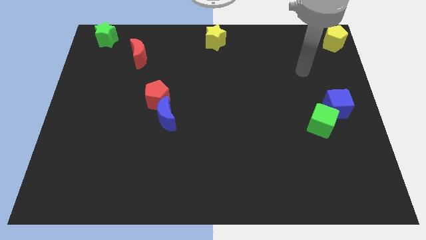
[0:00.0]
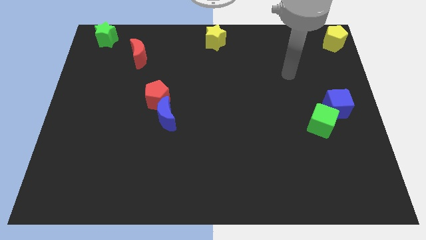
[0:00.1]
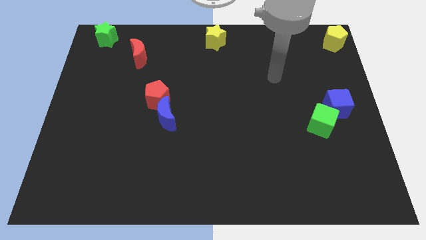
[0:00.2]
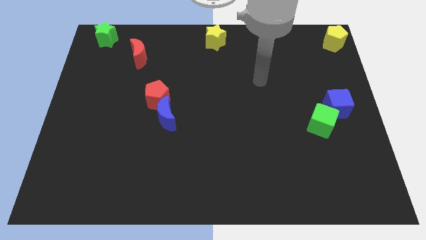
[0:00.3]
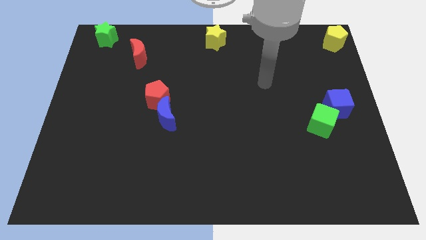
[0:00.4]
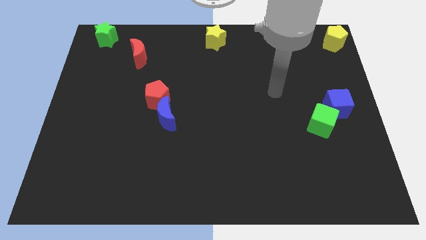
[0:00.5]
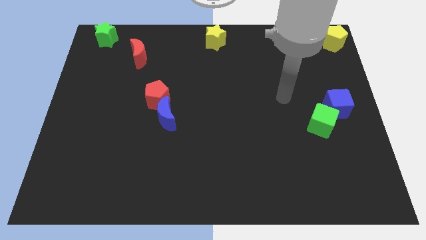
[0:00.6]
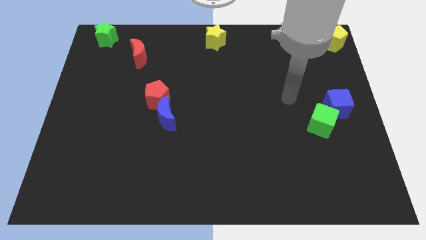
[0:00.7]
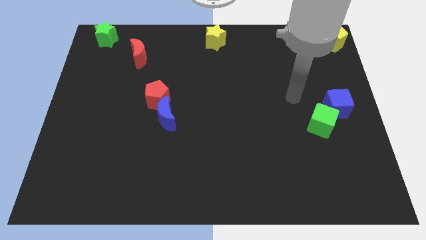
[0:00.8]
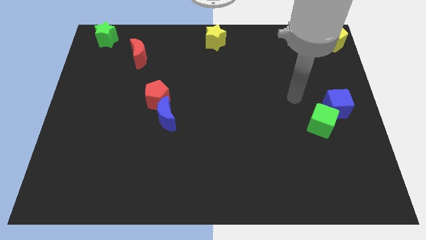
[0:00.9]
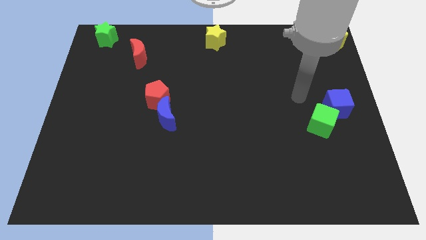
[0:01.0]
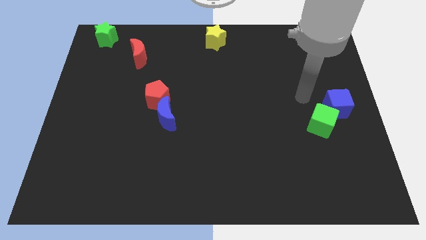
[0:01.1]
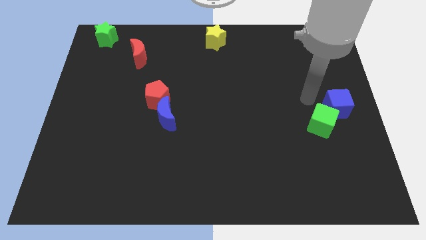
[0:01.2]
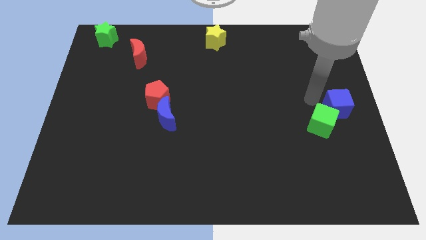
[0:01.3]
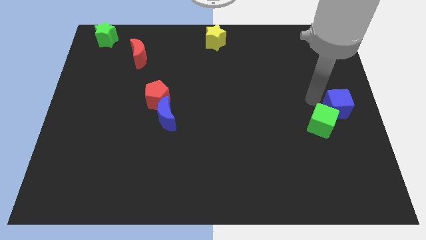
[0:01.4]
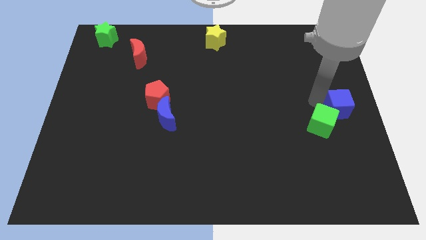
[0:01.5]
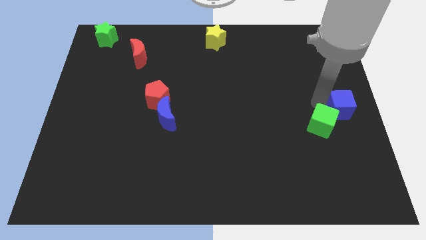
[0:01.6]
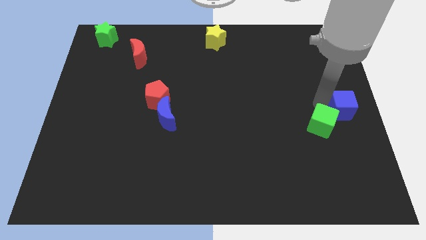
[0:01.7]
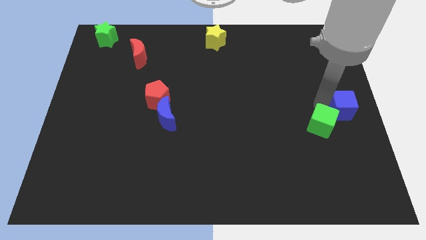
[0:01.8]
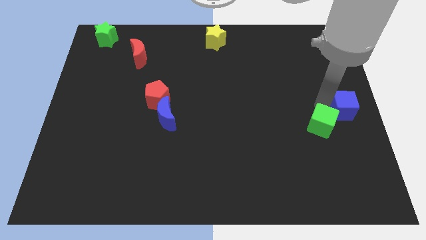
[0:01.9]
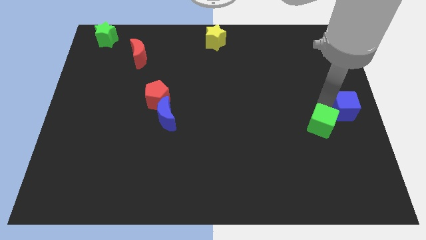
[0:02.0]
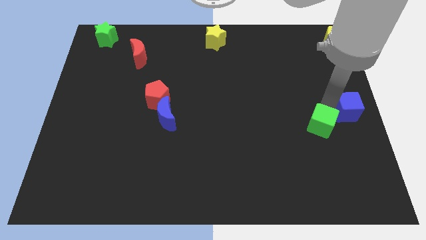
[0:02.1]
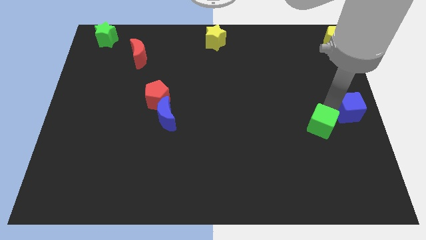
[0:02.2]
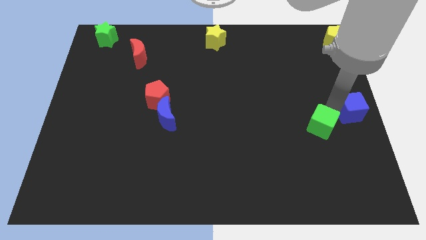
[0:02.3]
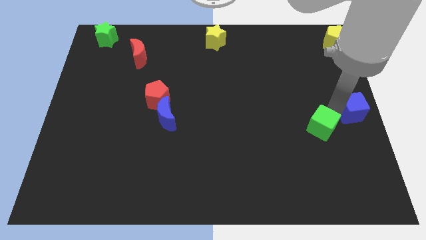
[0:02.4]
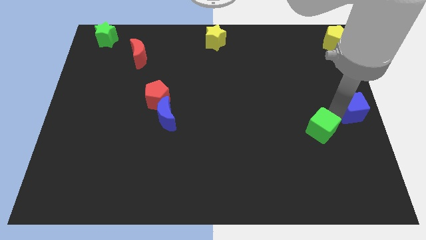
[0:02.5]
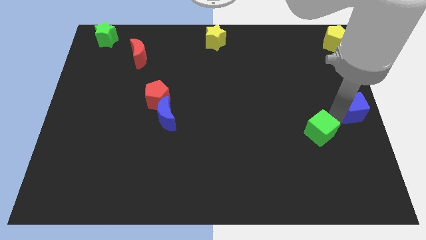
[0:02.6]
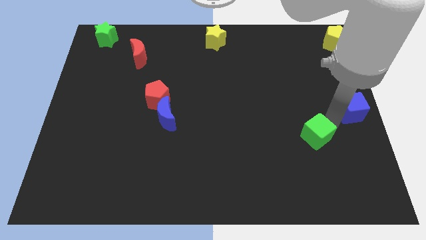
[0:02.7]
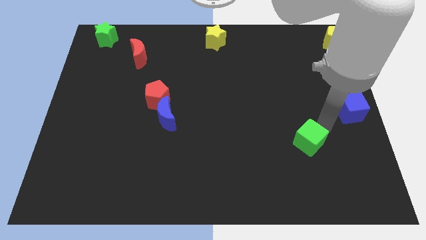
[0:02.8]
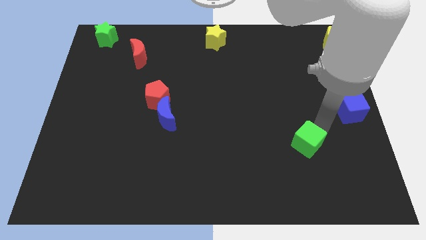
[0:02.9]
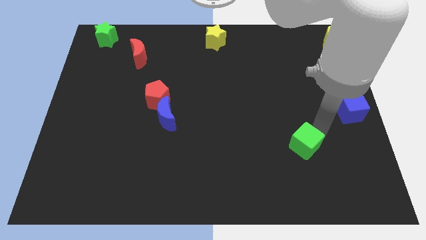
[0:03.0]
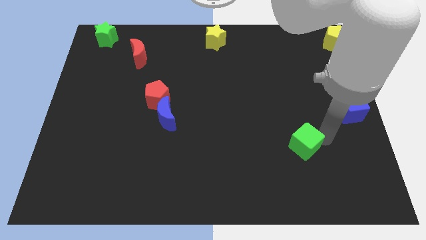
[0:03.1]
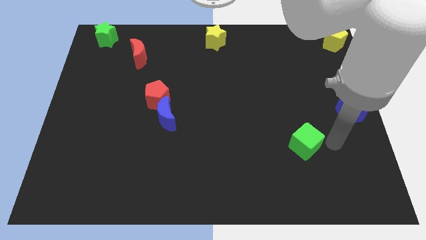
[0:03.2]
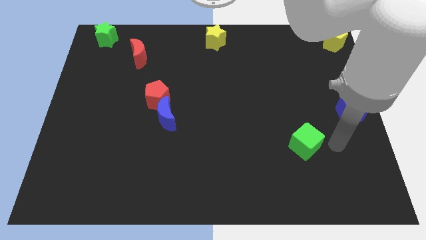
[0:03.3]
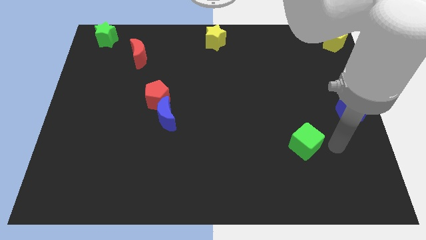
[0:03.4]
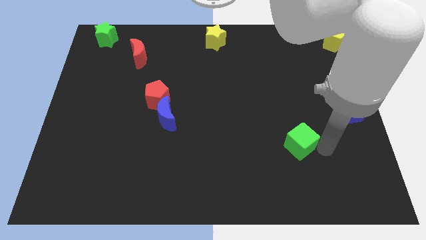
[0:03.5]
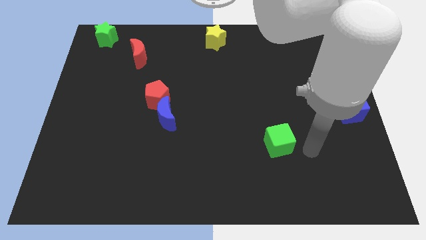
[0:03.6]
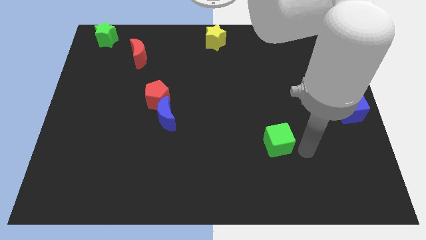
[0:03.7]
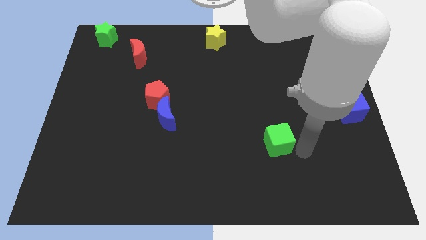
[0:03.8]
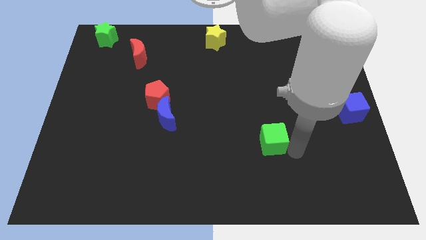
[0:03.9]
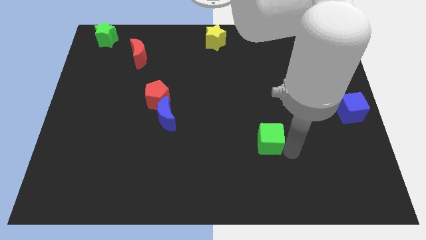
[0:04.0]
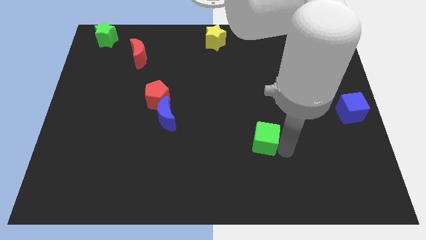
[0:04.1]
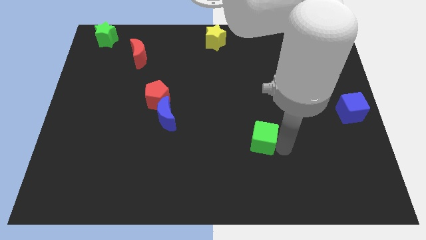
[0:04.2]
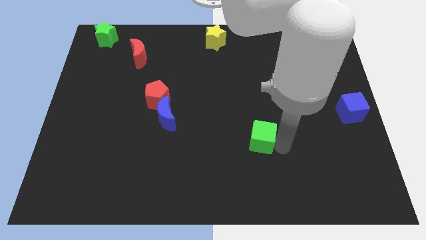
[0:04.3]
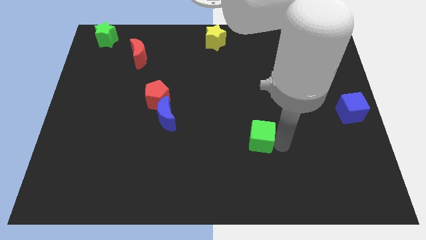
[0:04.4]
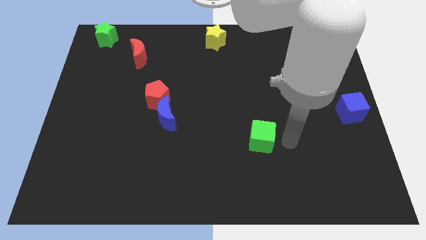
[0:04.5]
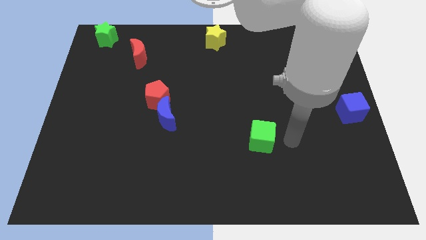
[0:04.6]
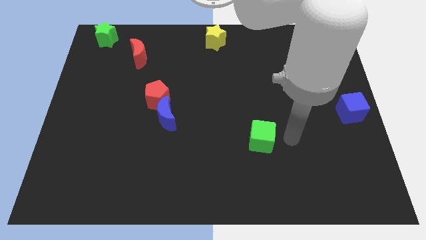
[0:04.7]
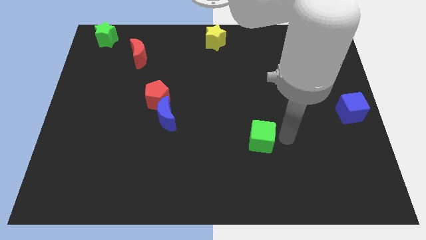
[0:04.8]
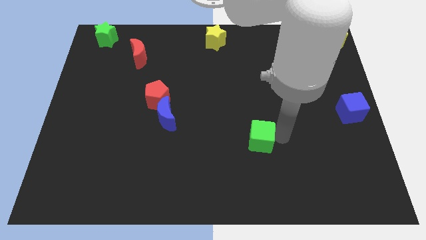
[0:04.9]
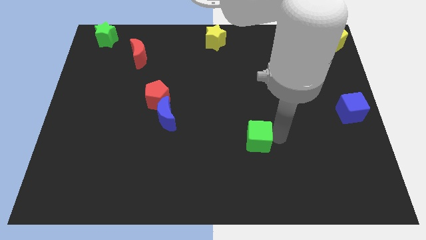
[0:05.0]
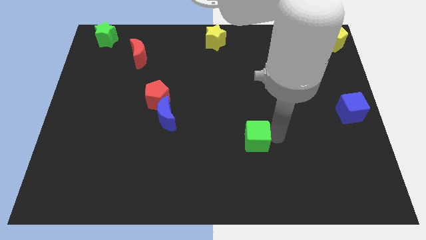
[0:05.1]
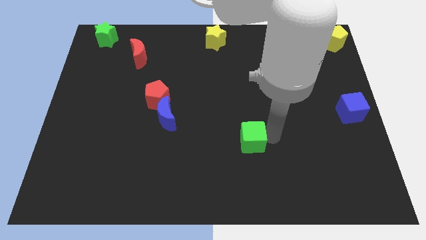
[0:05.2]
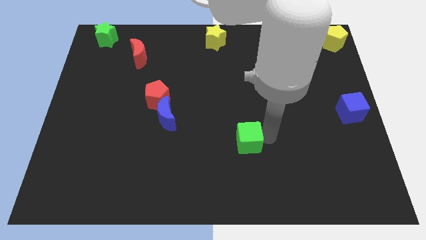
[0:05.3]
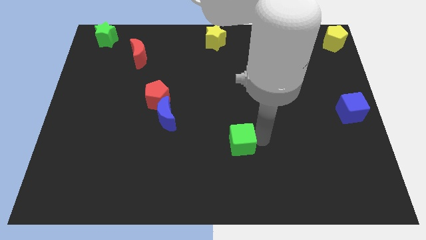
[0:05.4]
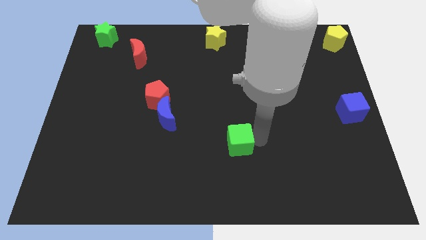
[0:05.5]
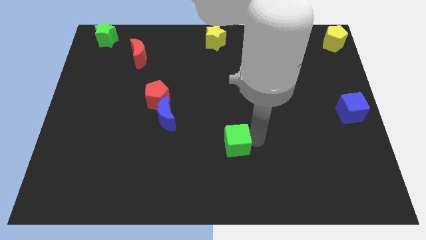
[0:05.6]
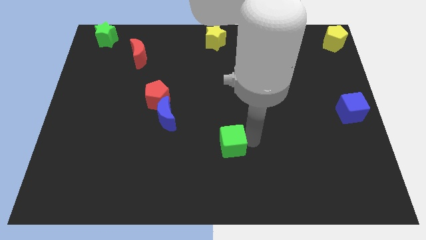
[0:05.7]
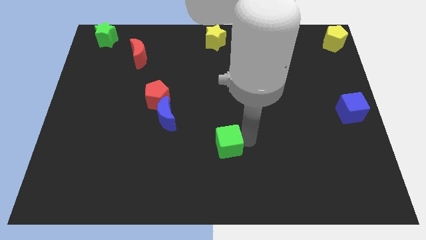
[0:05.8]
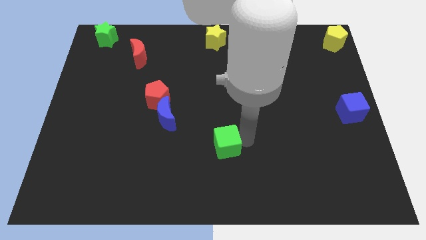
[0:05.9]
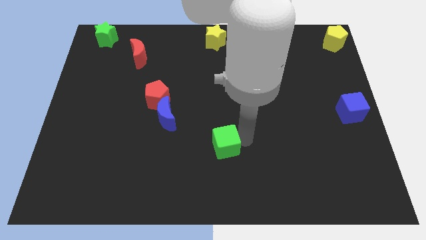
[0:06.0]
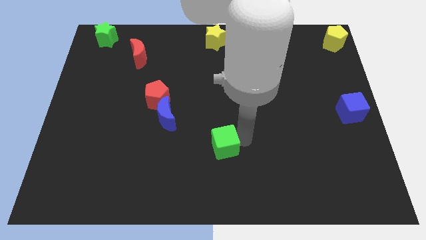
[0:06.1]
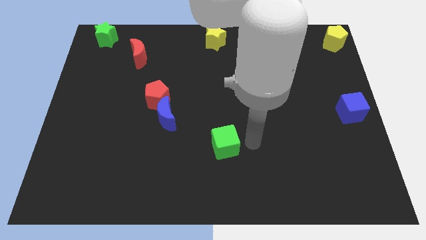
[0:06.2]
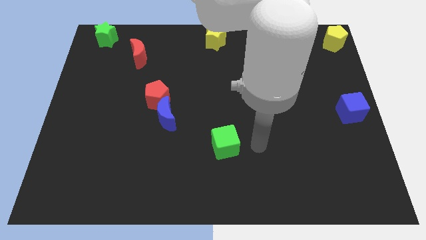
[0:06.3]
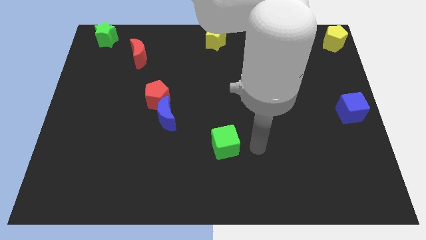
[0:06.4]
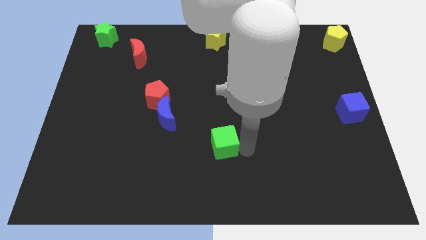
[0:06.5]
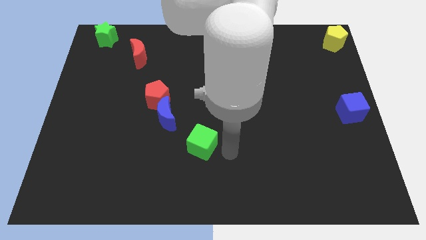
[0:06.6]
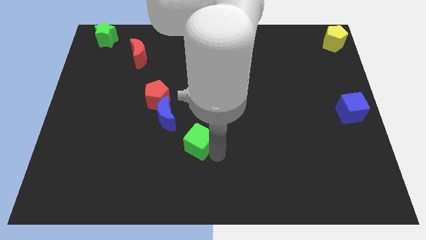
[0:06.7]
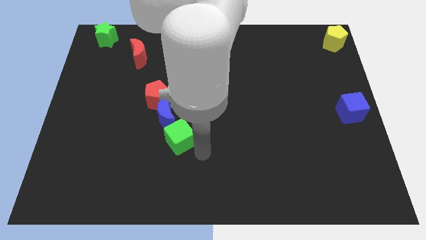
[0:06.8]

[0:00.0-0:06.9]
push the green cube to the left

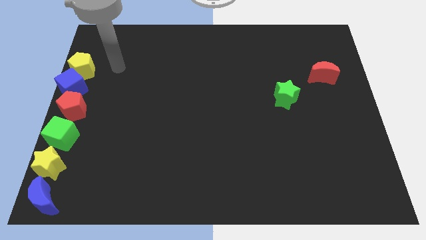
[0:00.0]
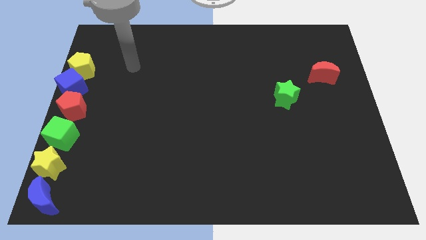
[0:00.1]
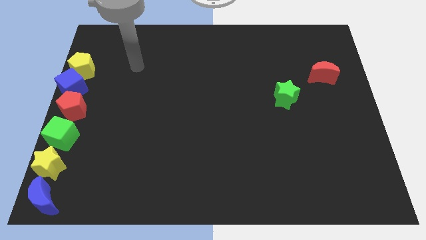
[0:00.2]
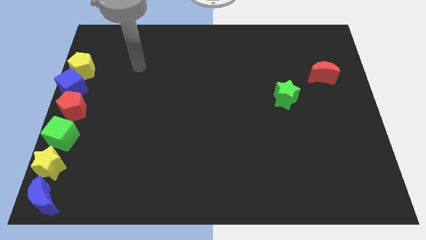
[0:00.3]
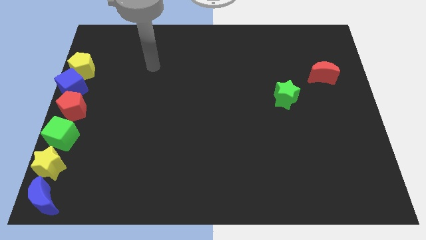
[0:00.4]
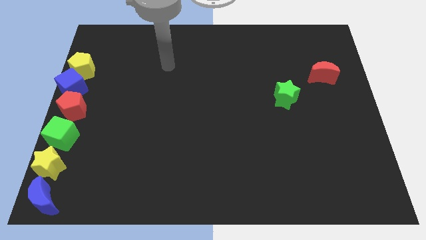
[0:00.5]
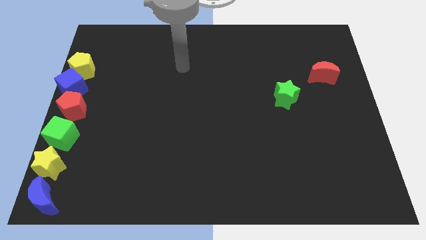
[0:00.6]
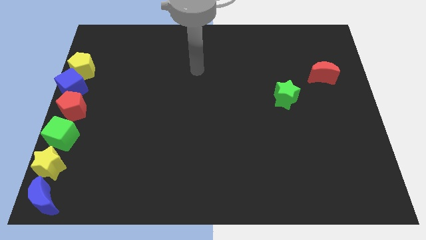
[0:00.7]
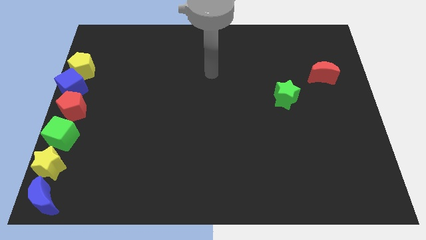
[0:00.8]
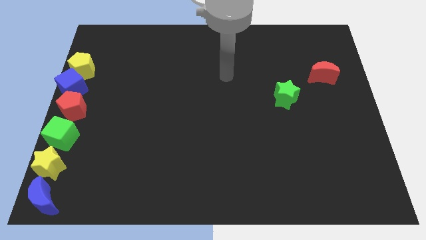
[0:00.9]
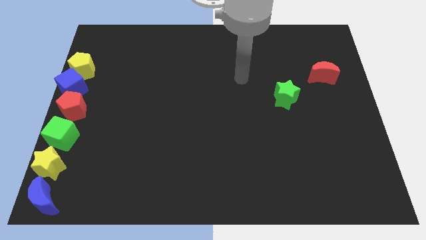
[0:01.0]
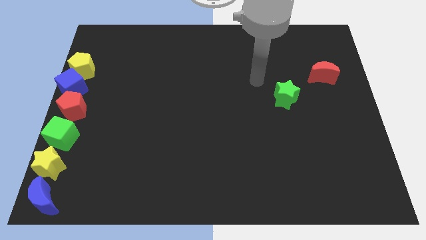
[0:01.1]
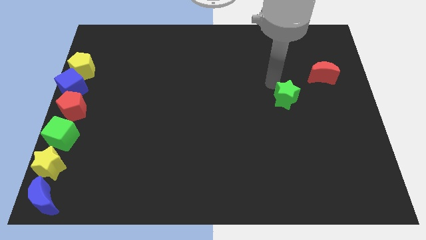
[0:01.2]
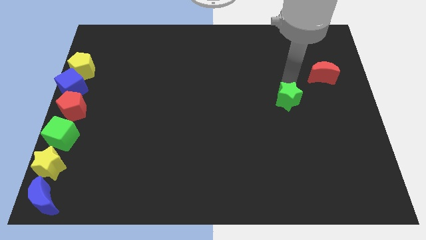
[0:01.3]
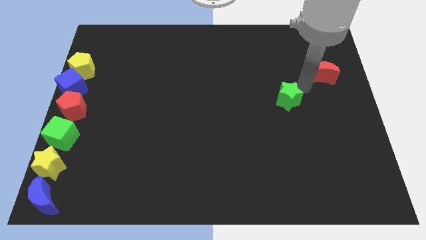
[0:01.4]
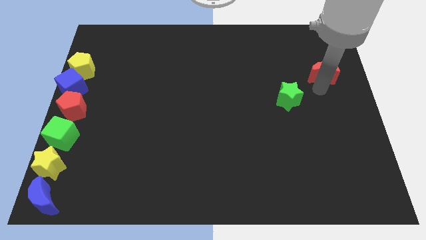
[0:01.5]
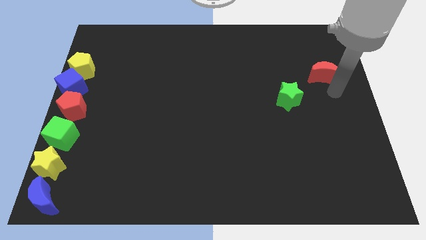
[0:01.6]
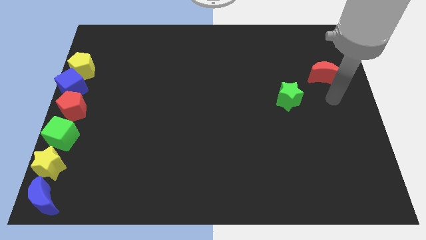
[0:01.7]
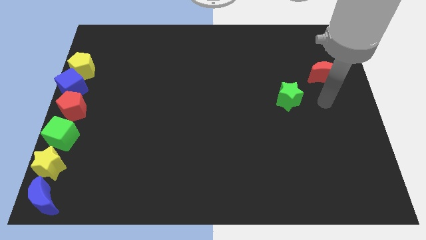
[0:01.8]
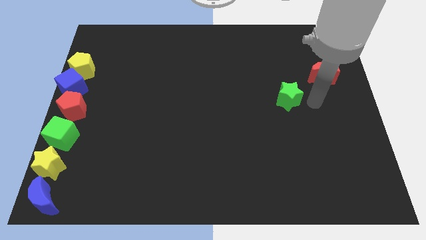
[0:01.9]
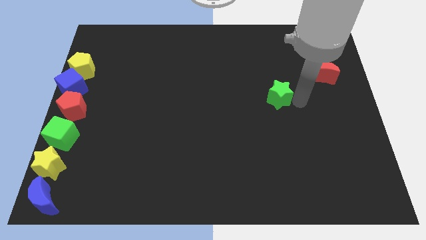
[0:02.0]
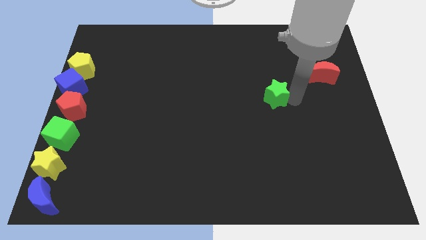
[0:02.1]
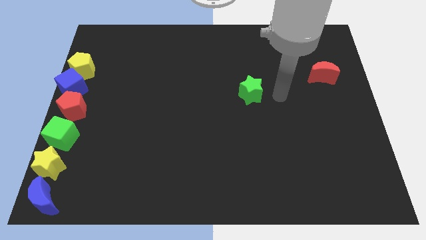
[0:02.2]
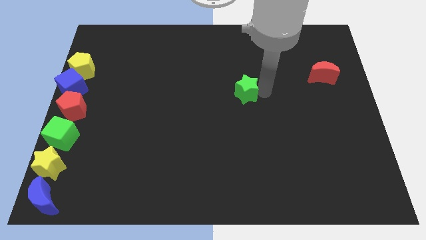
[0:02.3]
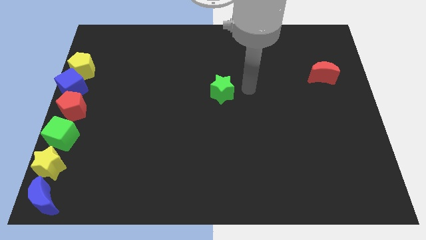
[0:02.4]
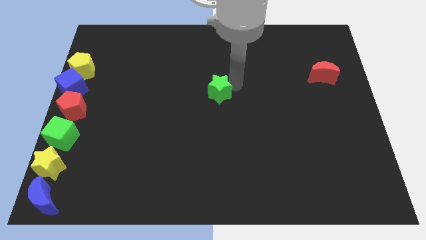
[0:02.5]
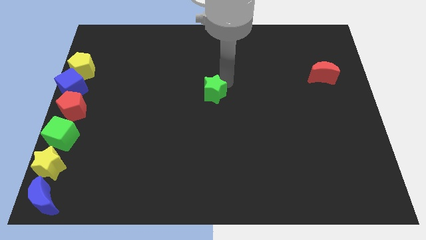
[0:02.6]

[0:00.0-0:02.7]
move the green star towards the center of the board
